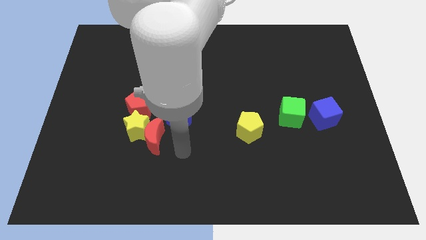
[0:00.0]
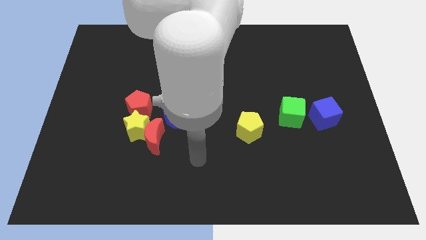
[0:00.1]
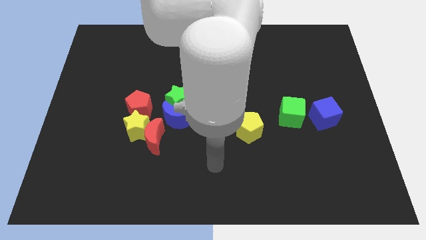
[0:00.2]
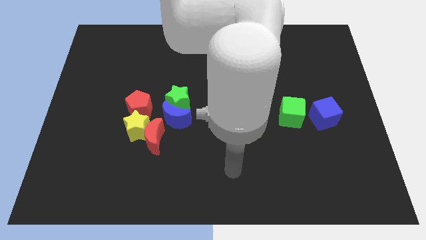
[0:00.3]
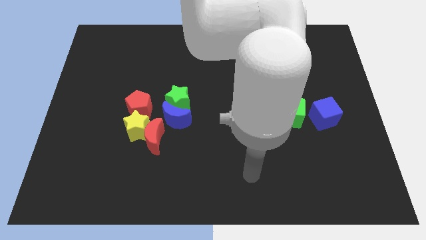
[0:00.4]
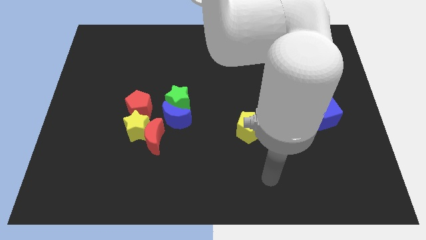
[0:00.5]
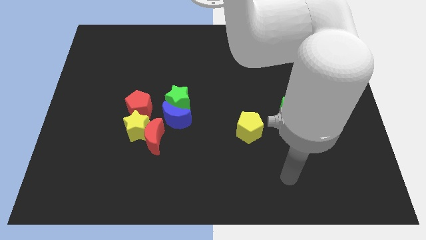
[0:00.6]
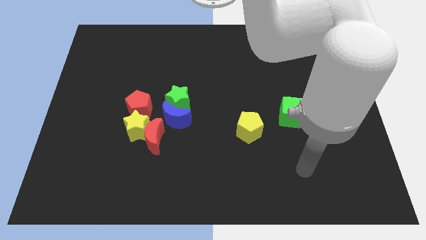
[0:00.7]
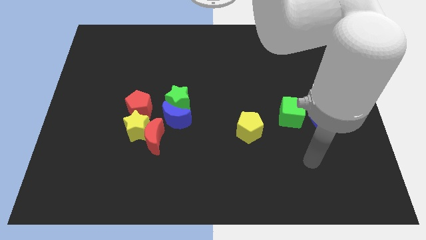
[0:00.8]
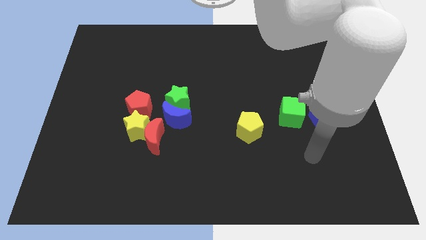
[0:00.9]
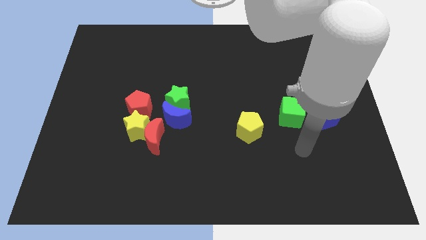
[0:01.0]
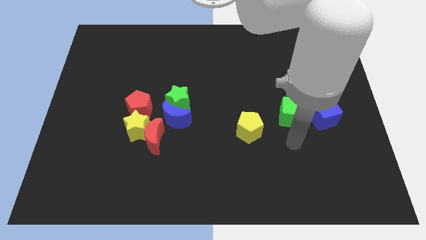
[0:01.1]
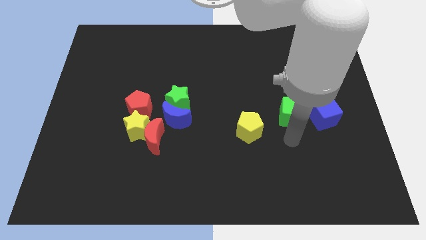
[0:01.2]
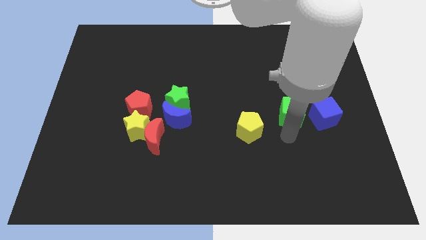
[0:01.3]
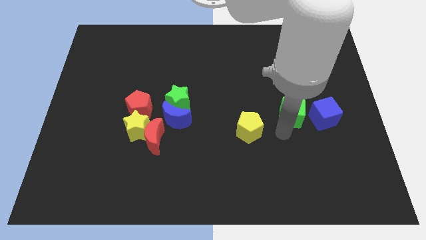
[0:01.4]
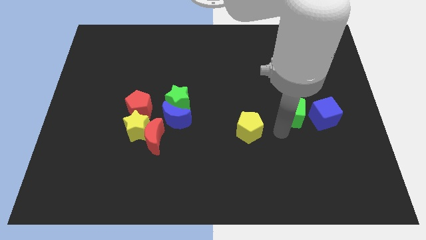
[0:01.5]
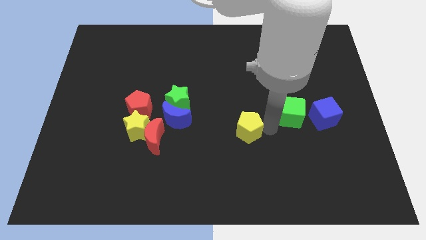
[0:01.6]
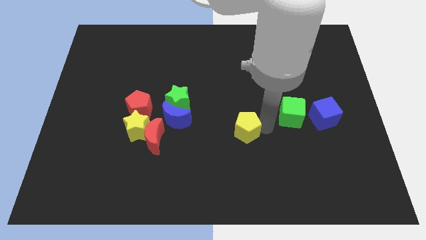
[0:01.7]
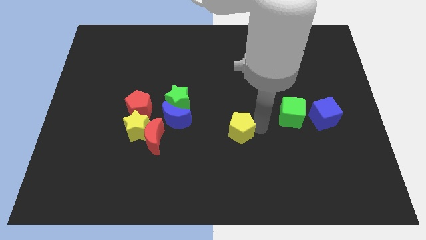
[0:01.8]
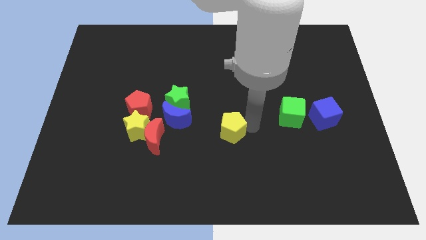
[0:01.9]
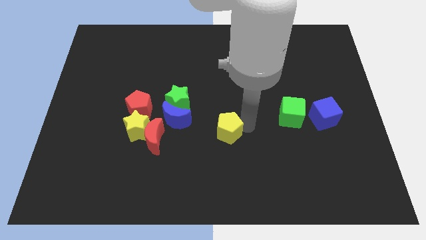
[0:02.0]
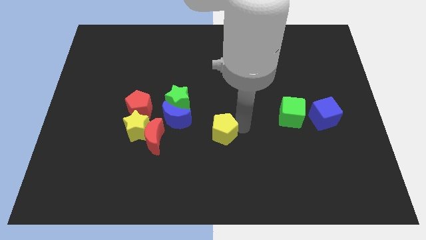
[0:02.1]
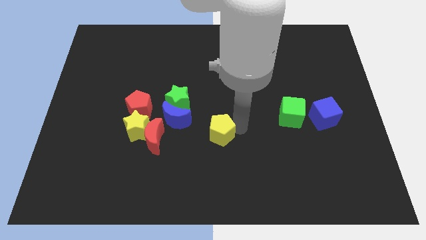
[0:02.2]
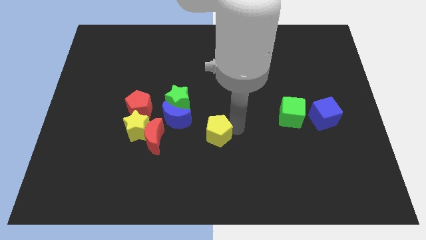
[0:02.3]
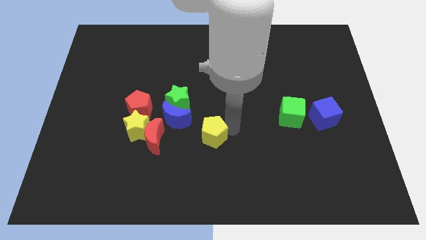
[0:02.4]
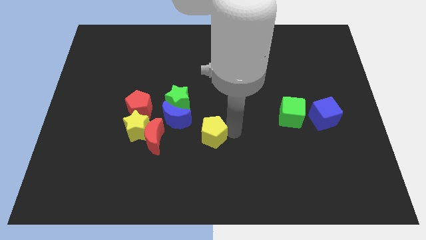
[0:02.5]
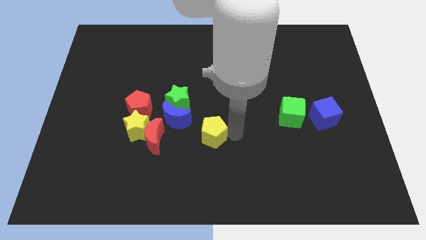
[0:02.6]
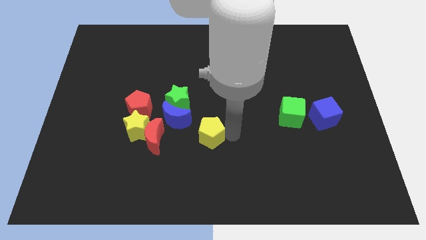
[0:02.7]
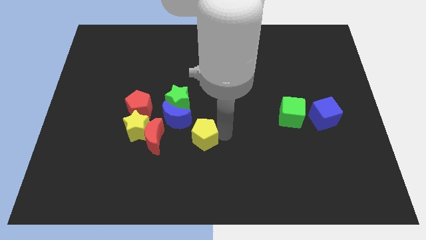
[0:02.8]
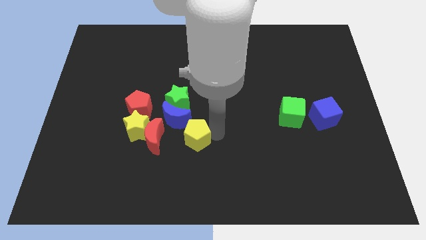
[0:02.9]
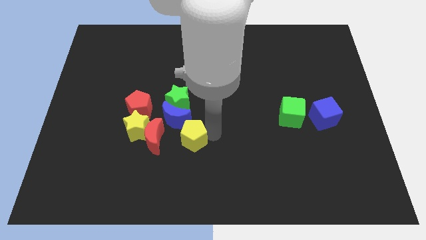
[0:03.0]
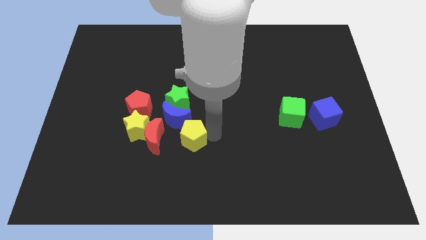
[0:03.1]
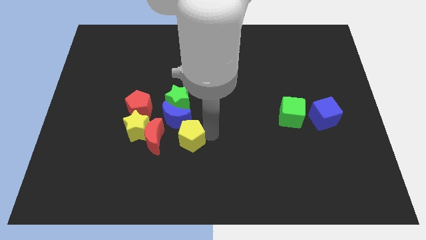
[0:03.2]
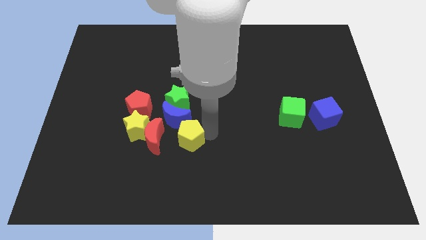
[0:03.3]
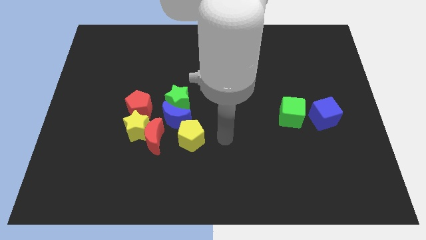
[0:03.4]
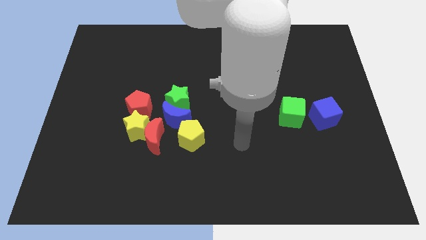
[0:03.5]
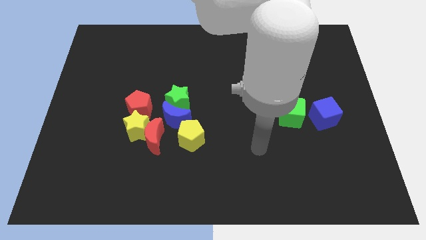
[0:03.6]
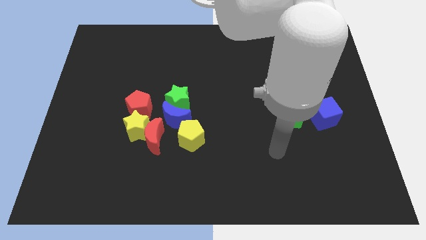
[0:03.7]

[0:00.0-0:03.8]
push the yellow pentagon to the bottom of the blue crescent

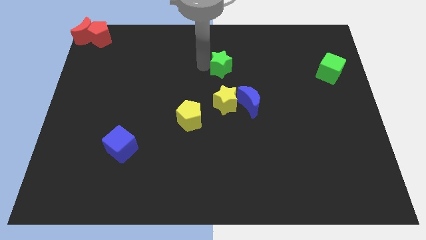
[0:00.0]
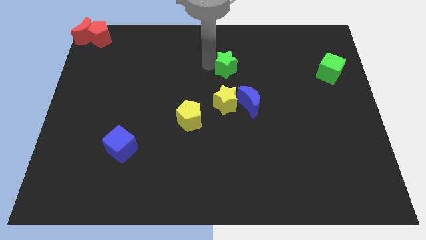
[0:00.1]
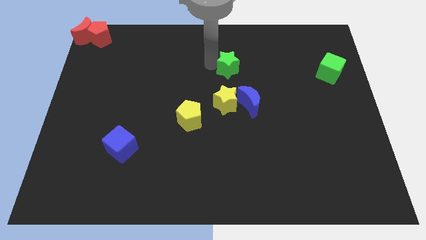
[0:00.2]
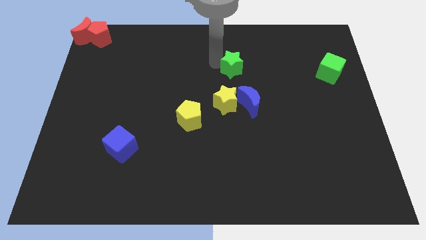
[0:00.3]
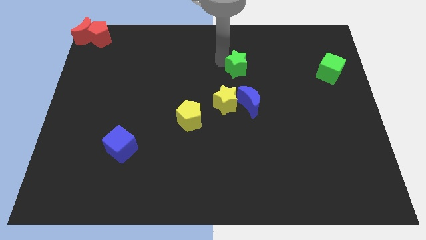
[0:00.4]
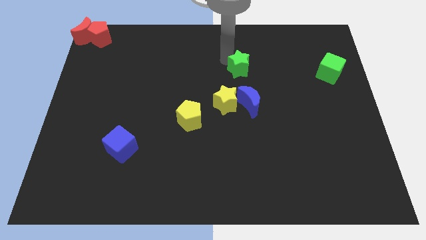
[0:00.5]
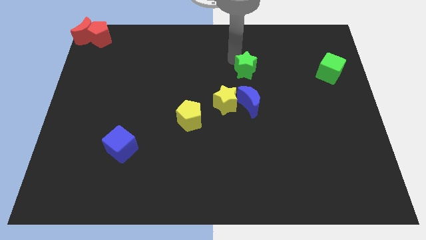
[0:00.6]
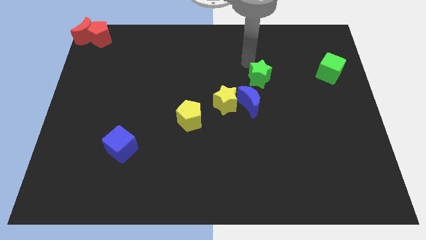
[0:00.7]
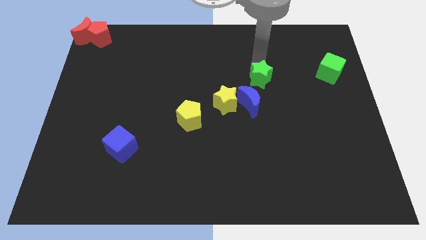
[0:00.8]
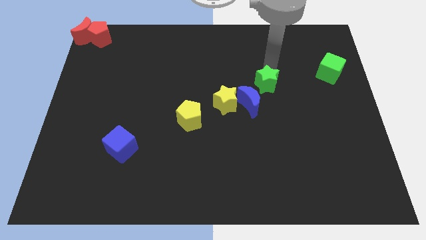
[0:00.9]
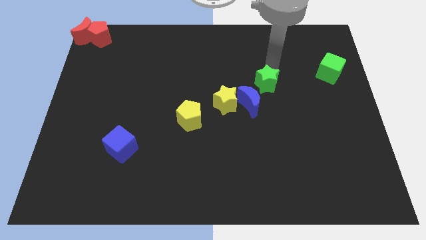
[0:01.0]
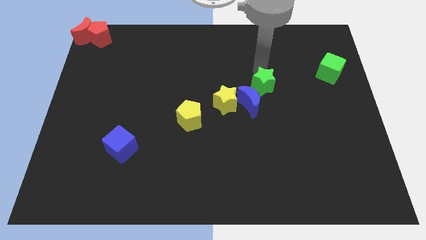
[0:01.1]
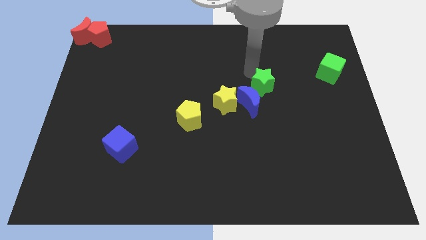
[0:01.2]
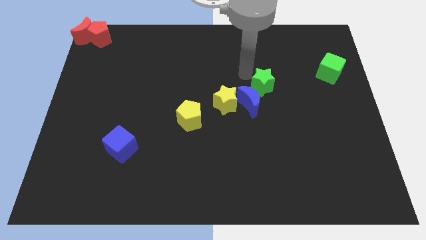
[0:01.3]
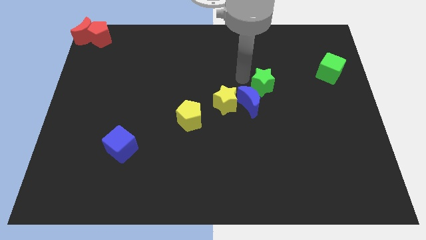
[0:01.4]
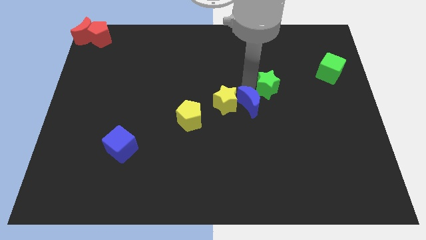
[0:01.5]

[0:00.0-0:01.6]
move the green star near the blue crescent

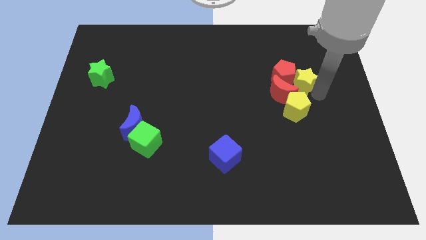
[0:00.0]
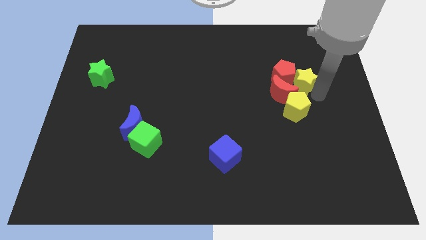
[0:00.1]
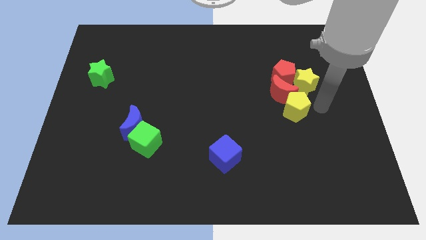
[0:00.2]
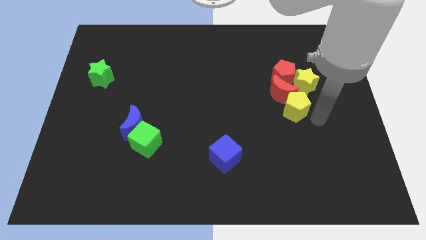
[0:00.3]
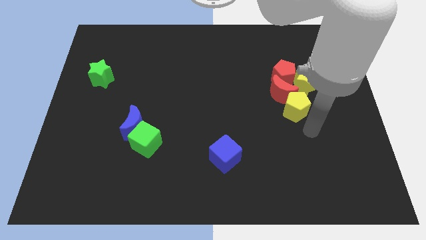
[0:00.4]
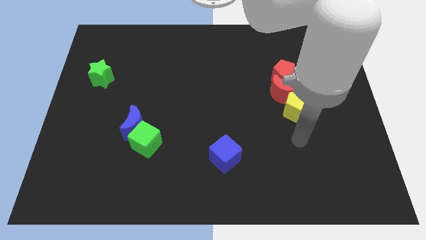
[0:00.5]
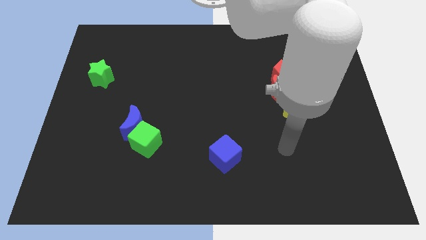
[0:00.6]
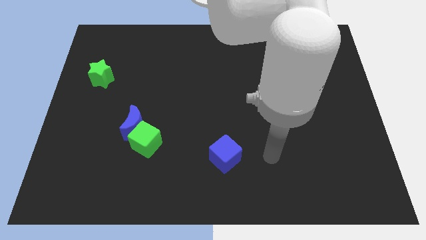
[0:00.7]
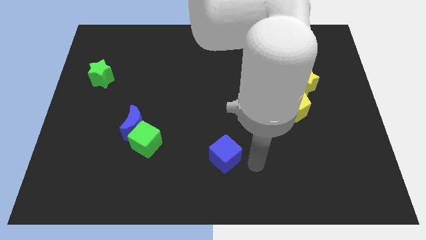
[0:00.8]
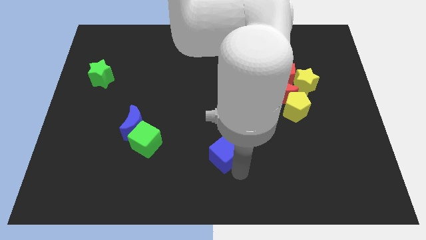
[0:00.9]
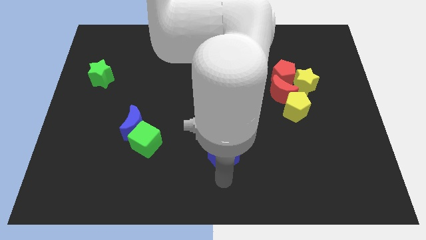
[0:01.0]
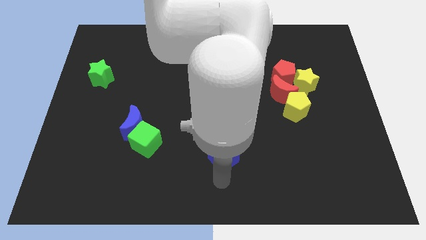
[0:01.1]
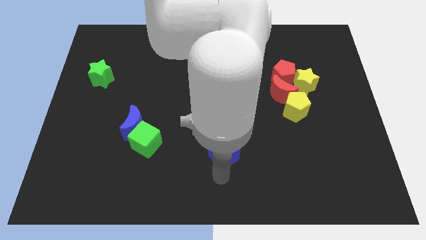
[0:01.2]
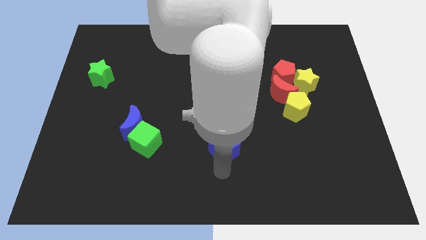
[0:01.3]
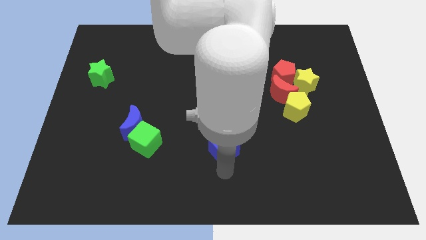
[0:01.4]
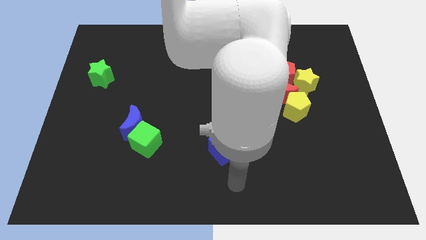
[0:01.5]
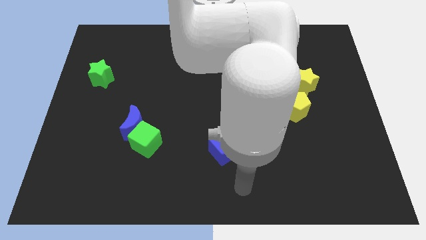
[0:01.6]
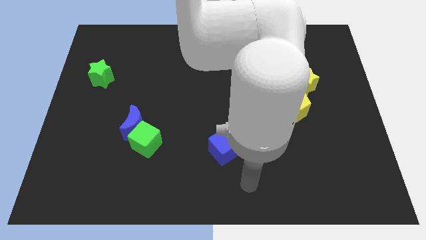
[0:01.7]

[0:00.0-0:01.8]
move the blue cube slightly up

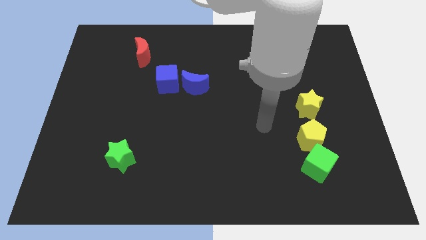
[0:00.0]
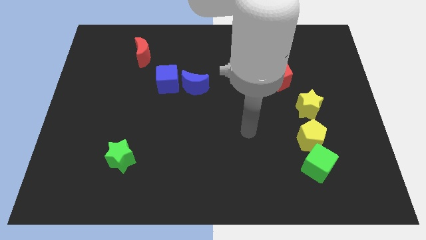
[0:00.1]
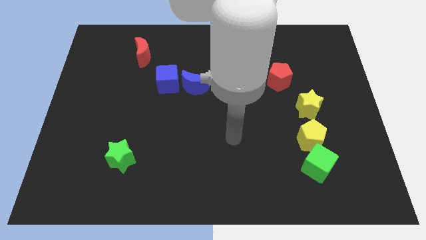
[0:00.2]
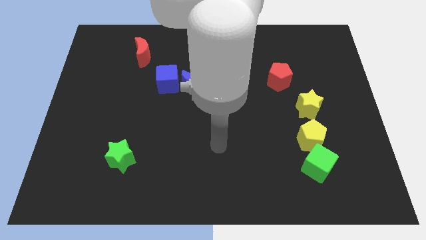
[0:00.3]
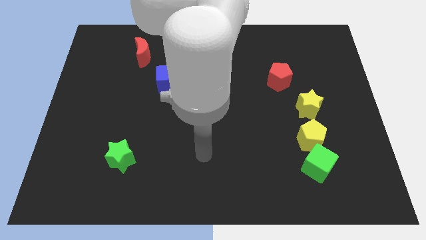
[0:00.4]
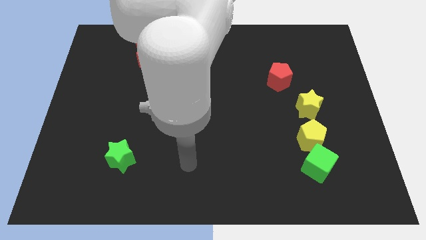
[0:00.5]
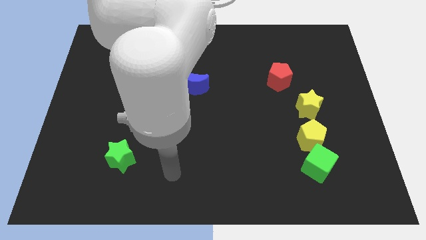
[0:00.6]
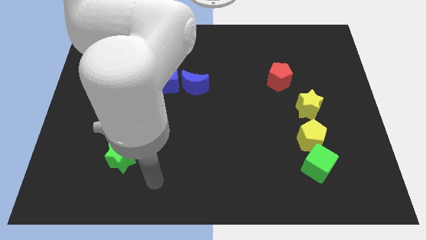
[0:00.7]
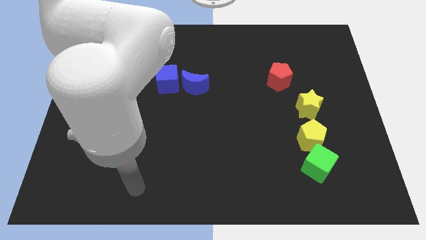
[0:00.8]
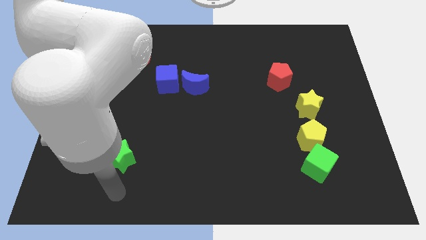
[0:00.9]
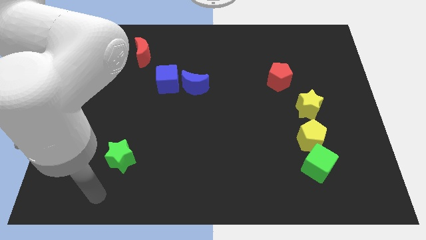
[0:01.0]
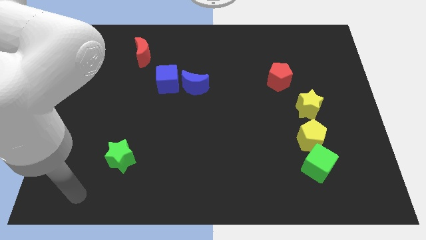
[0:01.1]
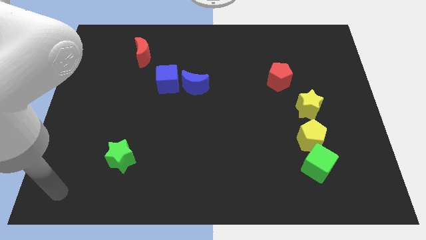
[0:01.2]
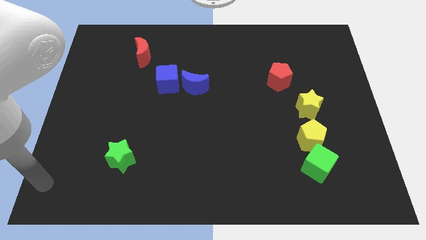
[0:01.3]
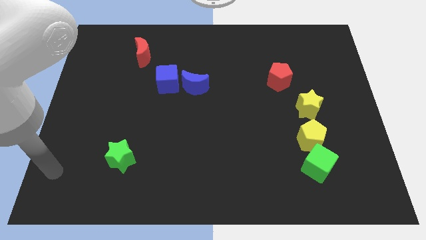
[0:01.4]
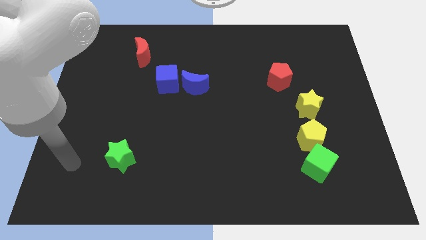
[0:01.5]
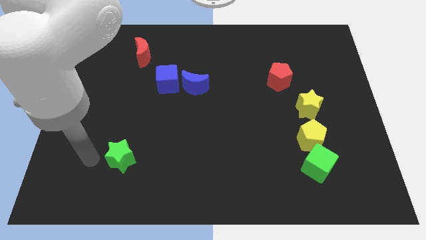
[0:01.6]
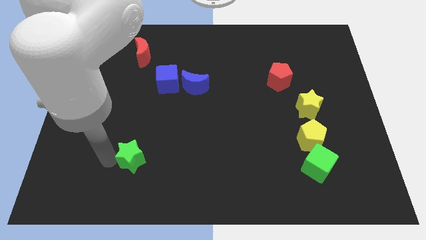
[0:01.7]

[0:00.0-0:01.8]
touch the green star

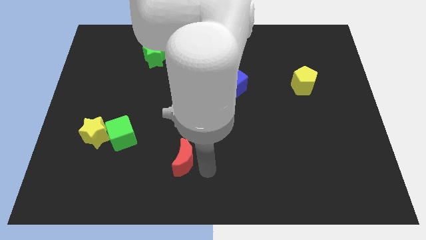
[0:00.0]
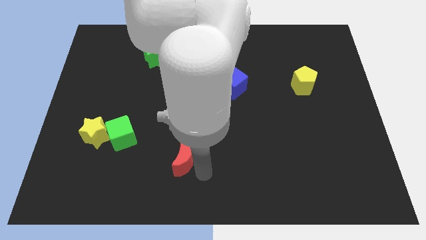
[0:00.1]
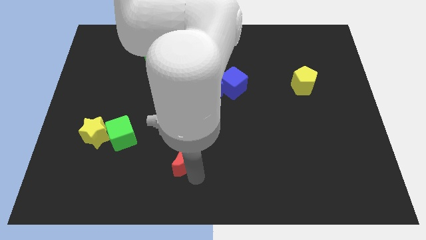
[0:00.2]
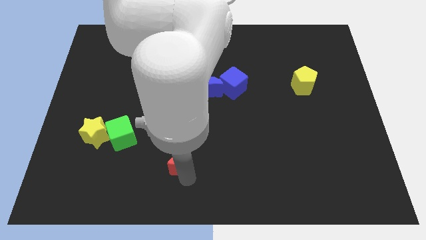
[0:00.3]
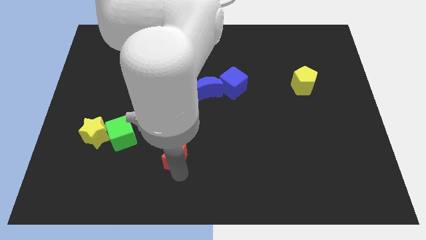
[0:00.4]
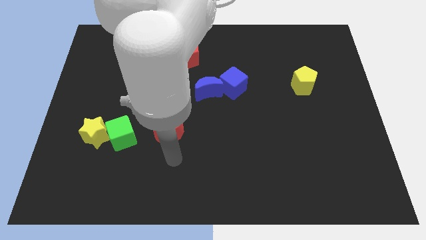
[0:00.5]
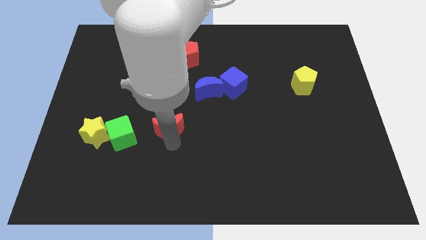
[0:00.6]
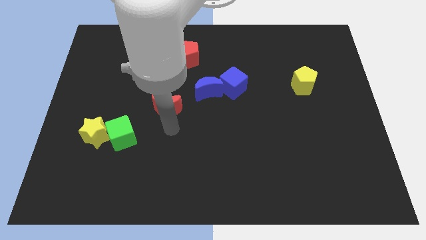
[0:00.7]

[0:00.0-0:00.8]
move the red moon right to the green cube
